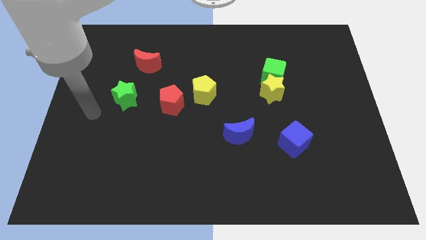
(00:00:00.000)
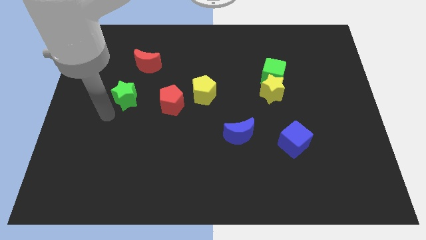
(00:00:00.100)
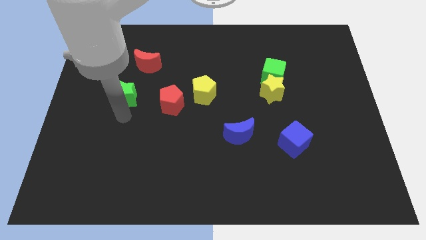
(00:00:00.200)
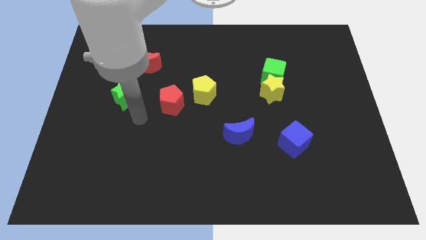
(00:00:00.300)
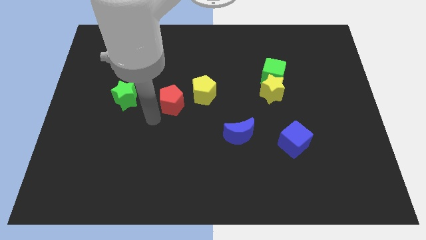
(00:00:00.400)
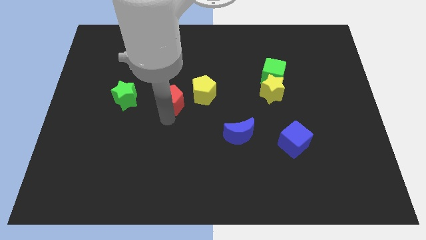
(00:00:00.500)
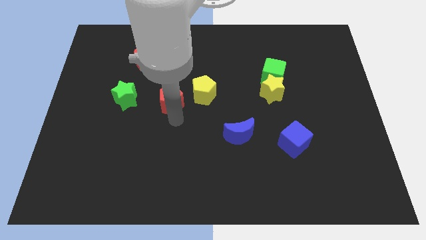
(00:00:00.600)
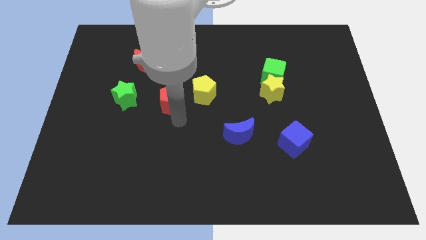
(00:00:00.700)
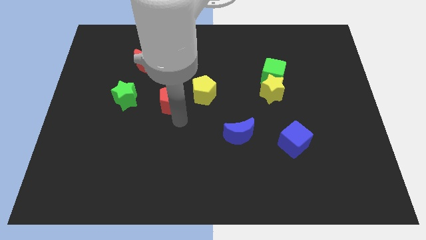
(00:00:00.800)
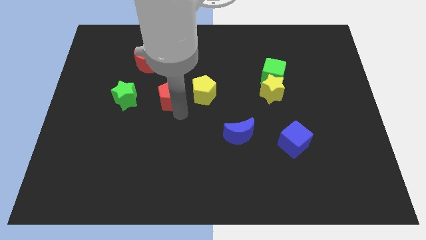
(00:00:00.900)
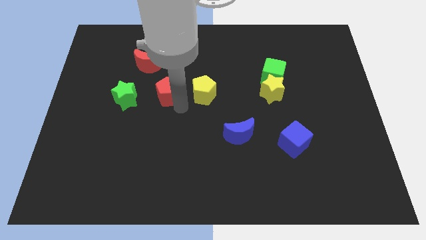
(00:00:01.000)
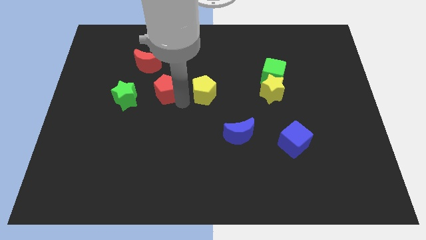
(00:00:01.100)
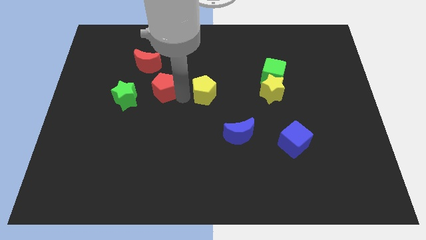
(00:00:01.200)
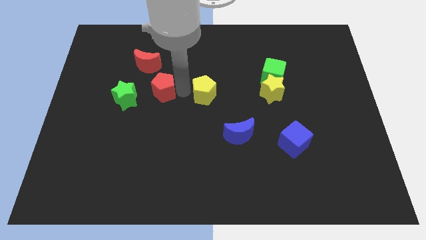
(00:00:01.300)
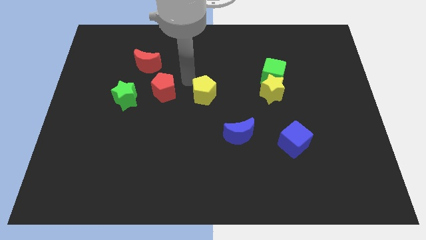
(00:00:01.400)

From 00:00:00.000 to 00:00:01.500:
push the red pentagon slightly to the top

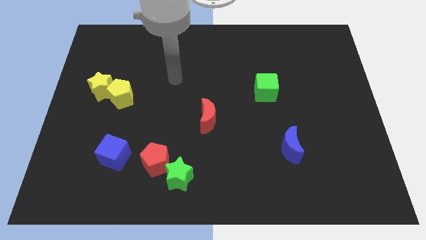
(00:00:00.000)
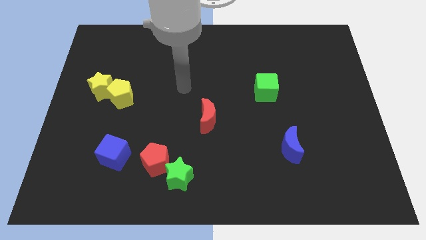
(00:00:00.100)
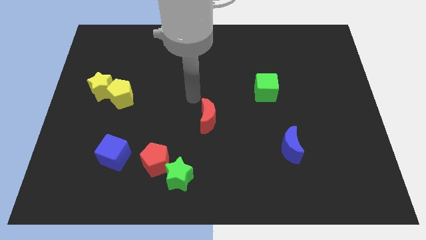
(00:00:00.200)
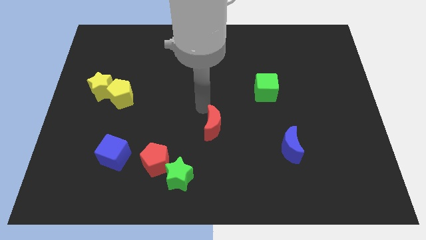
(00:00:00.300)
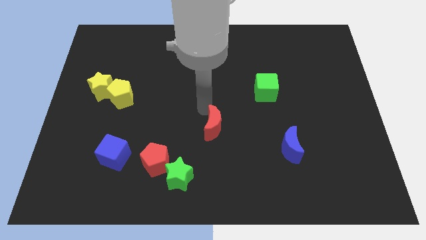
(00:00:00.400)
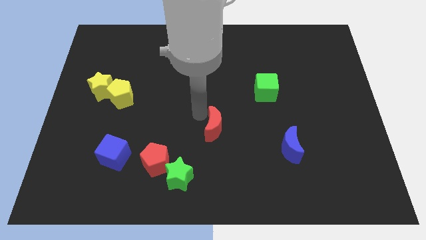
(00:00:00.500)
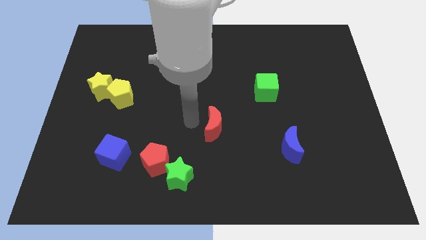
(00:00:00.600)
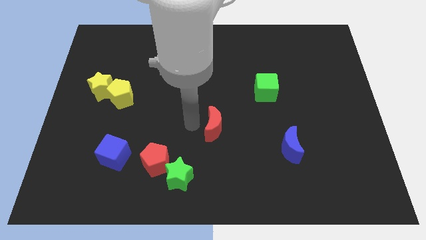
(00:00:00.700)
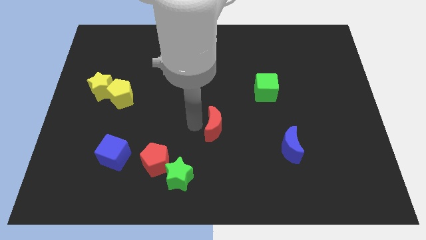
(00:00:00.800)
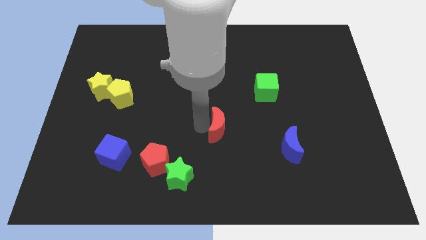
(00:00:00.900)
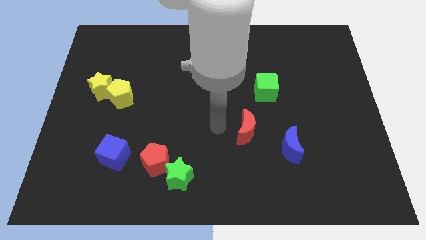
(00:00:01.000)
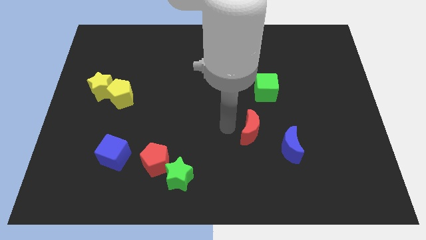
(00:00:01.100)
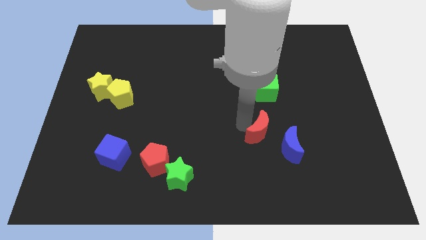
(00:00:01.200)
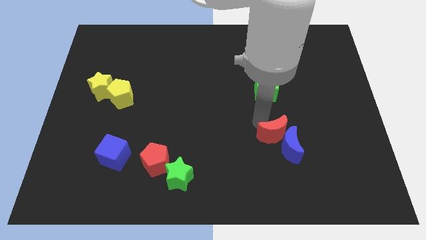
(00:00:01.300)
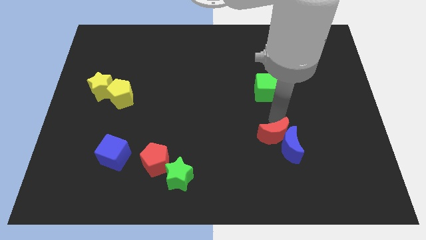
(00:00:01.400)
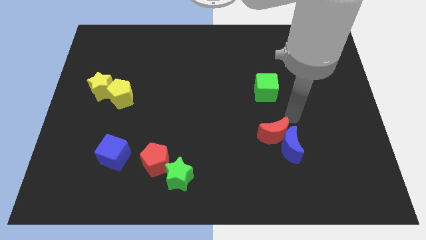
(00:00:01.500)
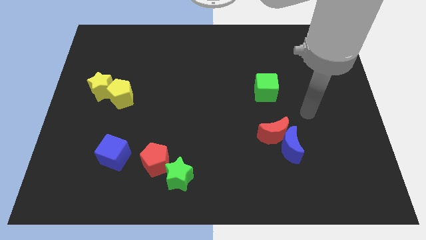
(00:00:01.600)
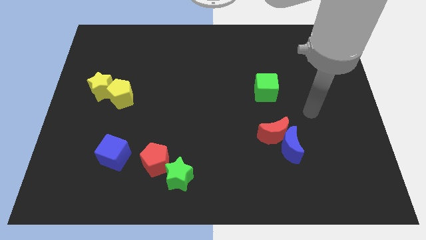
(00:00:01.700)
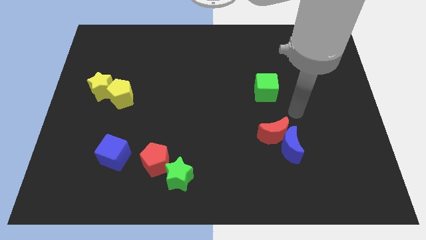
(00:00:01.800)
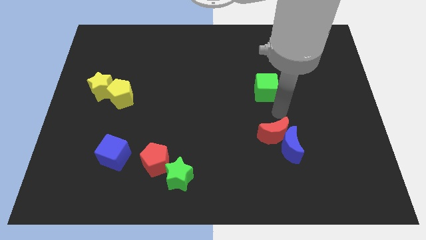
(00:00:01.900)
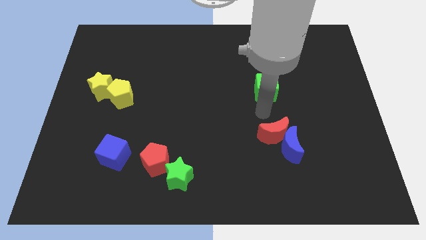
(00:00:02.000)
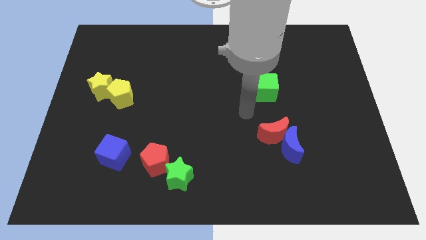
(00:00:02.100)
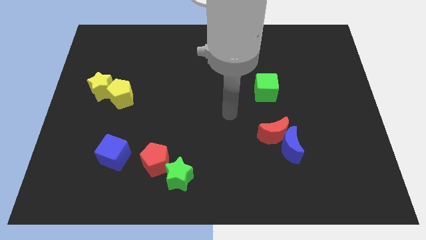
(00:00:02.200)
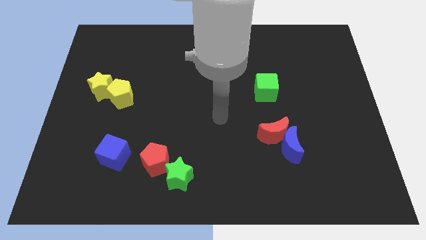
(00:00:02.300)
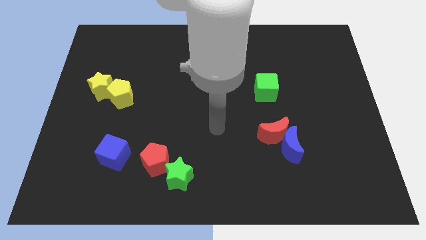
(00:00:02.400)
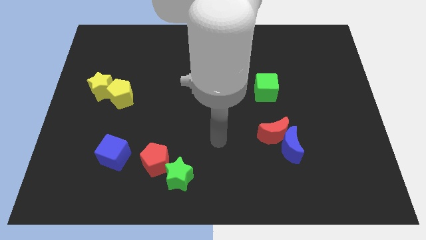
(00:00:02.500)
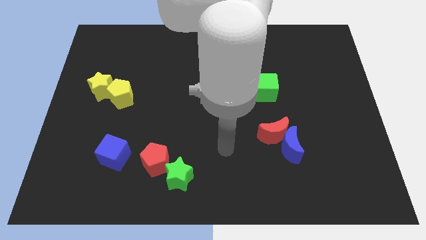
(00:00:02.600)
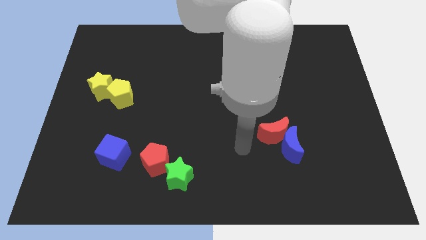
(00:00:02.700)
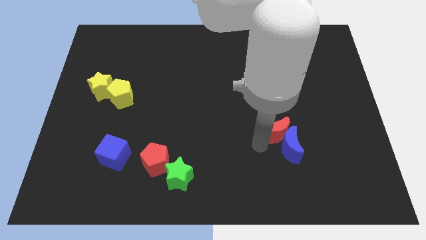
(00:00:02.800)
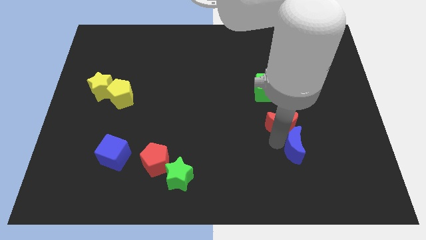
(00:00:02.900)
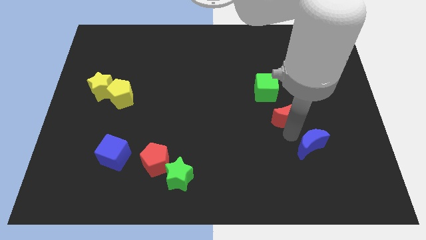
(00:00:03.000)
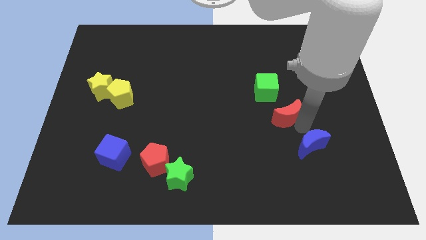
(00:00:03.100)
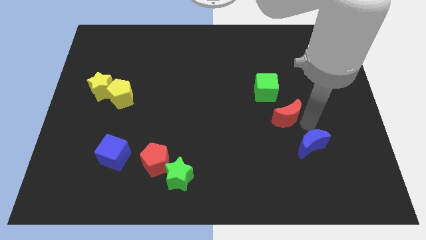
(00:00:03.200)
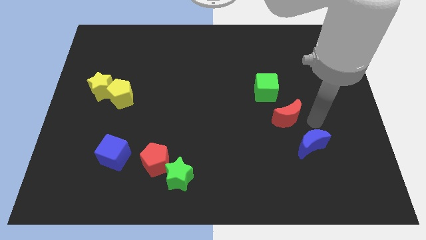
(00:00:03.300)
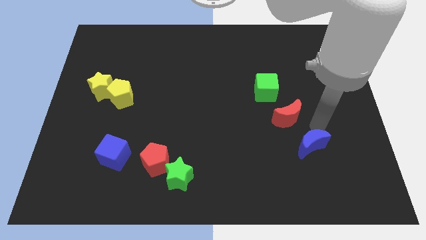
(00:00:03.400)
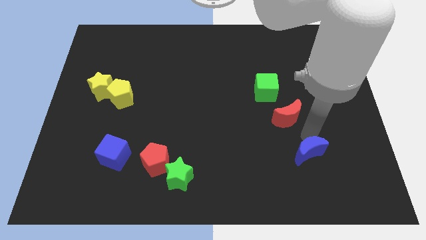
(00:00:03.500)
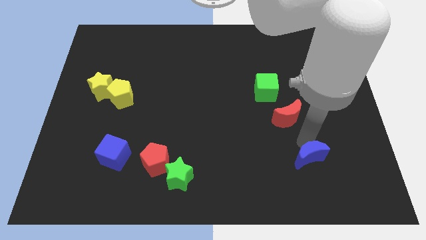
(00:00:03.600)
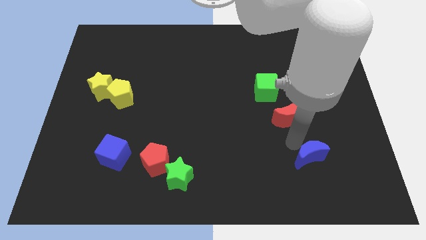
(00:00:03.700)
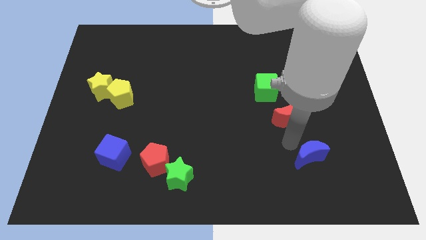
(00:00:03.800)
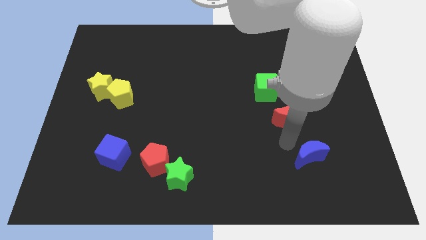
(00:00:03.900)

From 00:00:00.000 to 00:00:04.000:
separate the red crescent and blue crescent

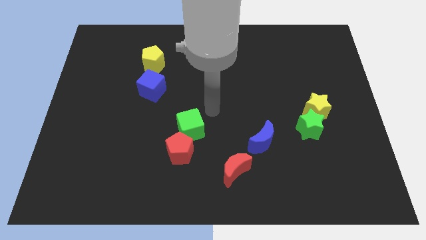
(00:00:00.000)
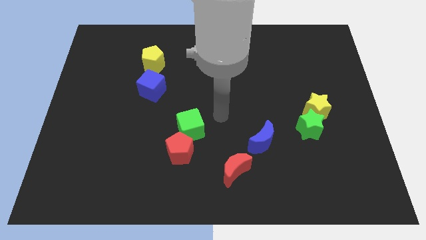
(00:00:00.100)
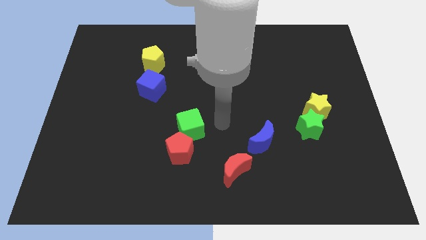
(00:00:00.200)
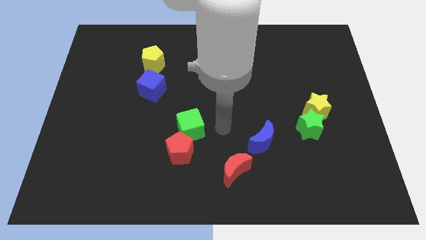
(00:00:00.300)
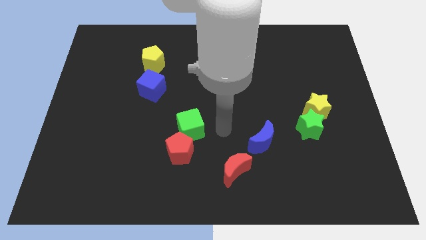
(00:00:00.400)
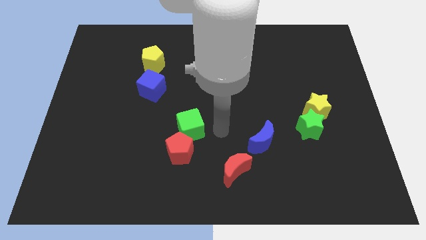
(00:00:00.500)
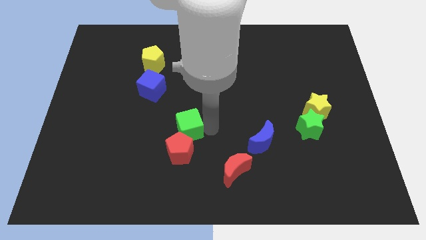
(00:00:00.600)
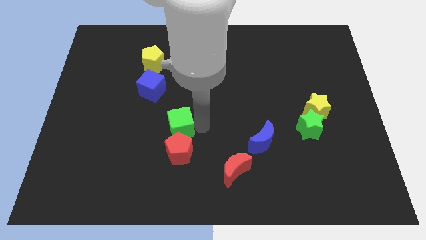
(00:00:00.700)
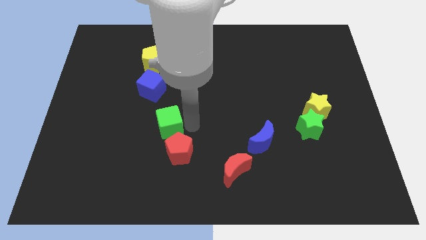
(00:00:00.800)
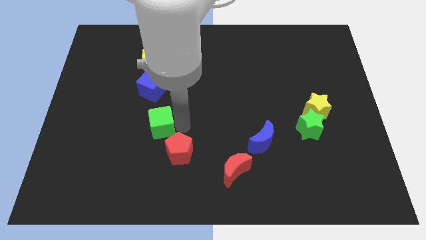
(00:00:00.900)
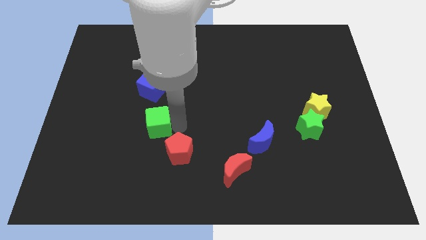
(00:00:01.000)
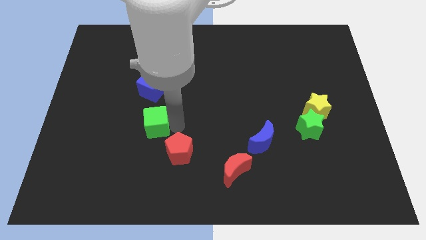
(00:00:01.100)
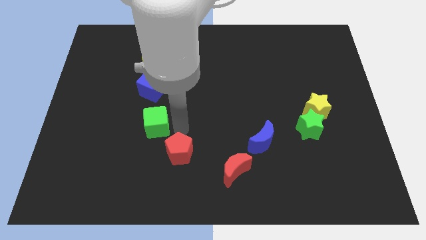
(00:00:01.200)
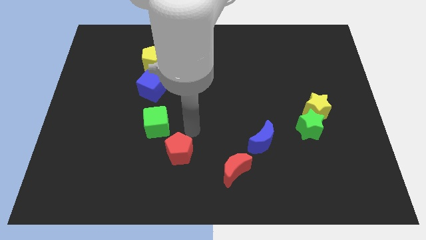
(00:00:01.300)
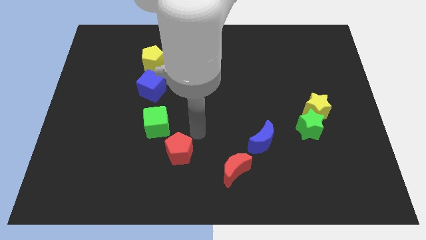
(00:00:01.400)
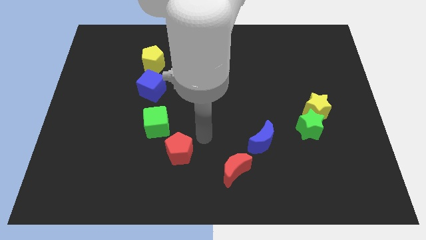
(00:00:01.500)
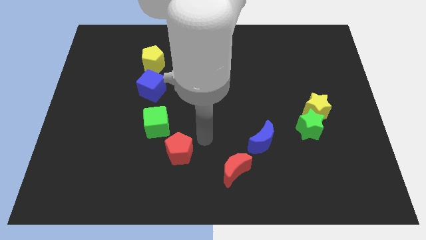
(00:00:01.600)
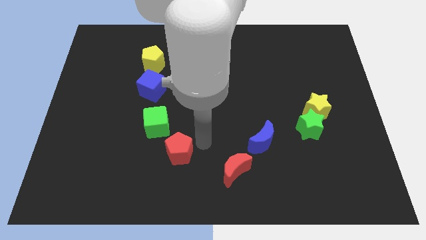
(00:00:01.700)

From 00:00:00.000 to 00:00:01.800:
slide the green cube to the bottom of the blue cube

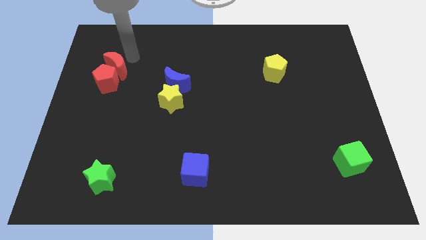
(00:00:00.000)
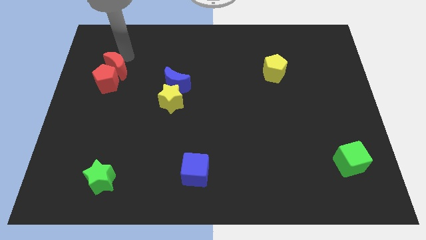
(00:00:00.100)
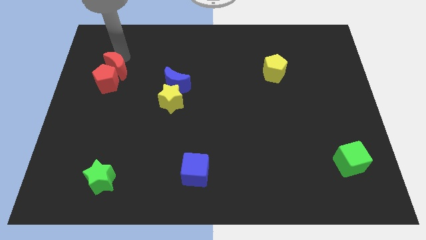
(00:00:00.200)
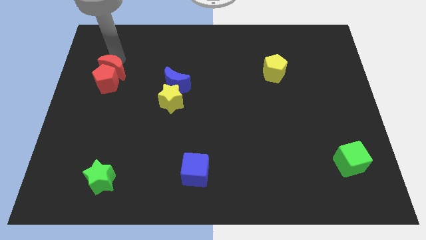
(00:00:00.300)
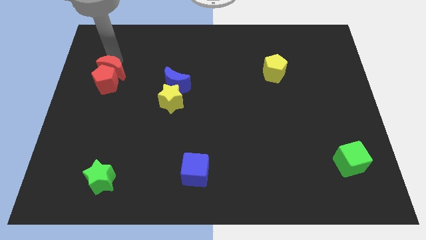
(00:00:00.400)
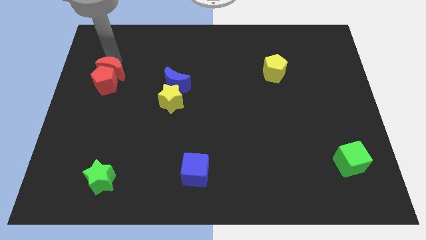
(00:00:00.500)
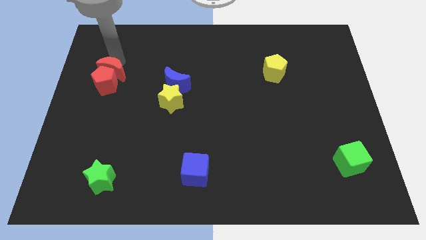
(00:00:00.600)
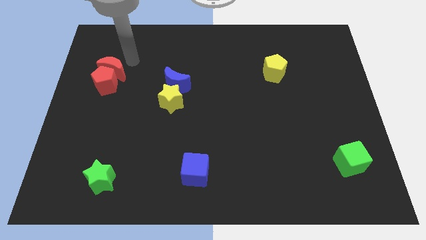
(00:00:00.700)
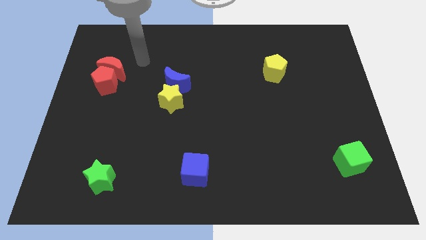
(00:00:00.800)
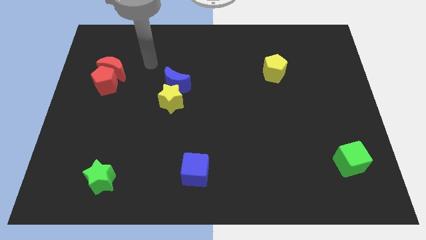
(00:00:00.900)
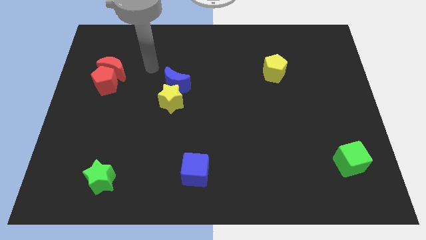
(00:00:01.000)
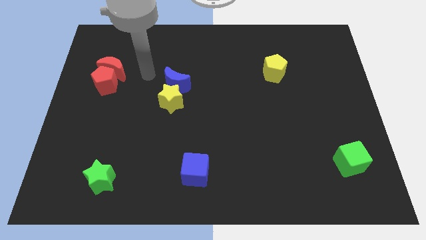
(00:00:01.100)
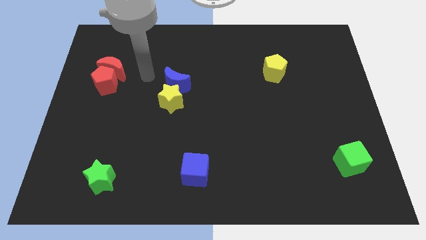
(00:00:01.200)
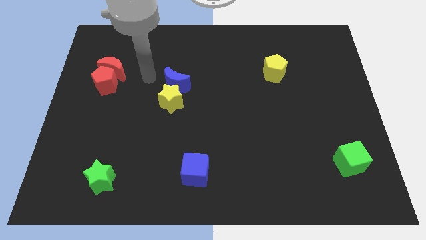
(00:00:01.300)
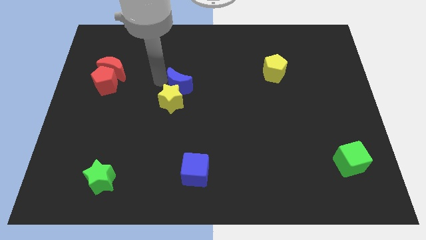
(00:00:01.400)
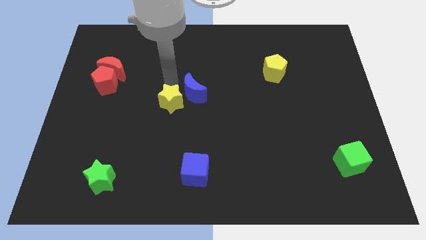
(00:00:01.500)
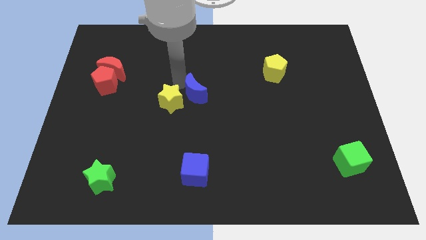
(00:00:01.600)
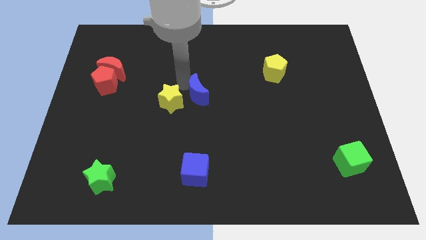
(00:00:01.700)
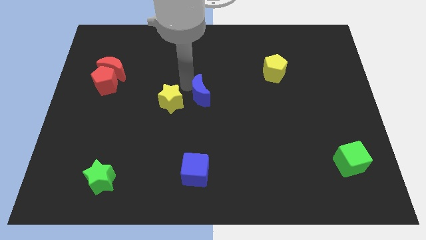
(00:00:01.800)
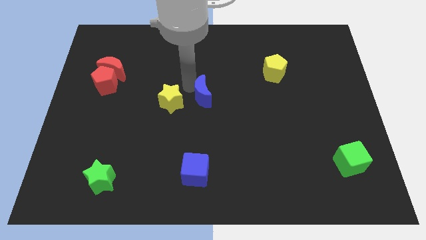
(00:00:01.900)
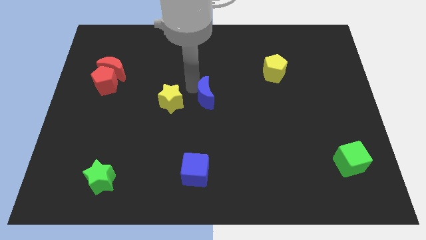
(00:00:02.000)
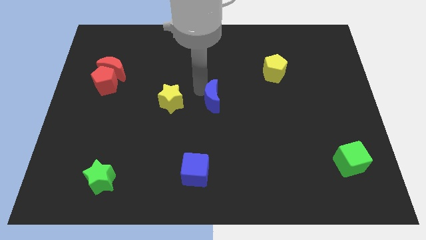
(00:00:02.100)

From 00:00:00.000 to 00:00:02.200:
move the blue crescent to the right side of the yellow star
